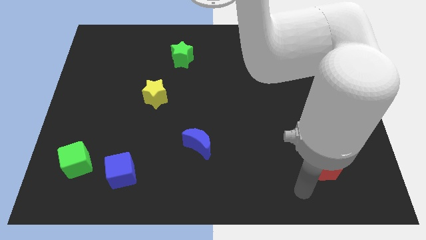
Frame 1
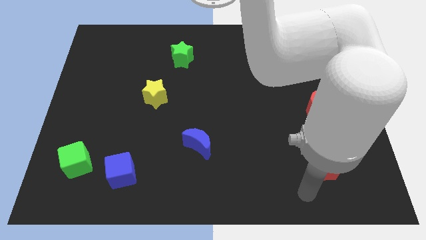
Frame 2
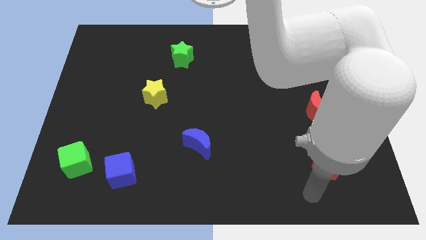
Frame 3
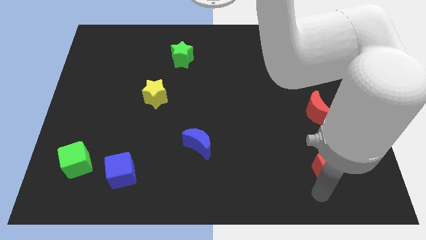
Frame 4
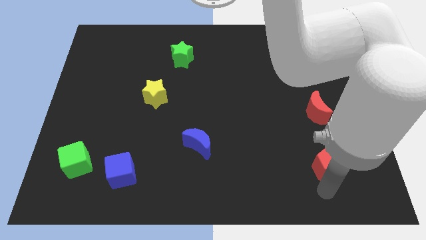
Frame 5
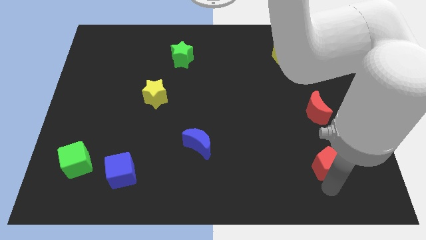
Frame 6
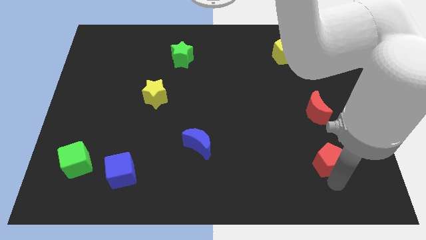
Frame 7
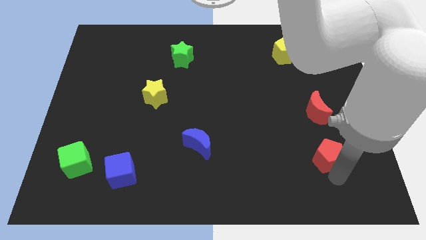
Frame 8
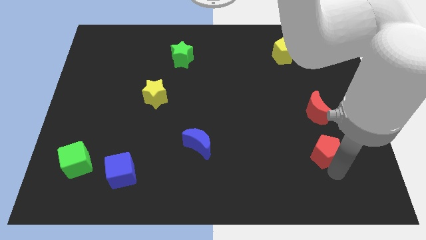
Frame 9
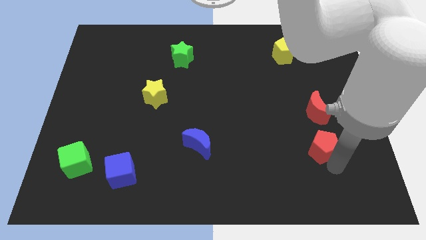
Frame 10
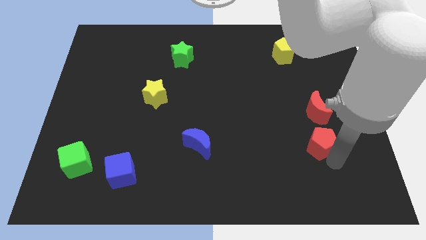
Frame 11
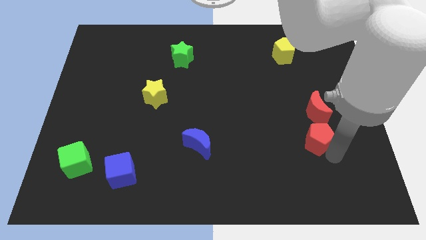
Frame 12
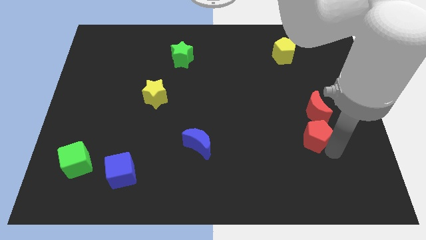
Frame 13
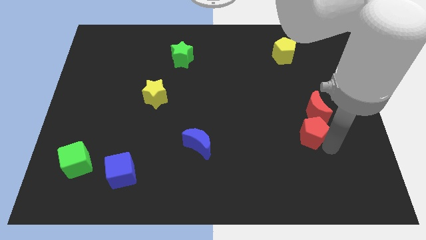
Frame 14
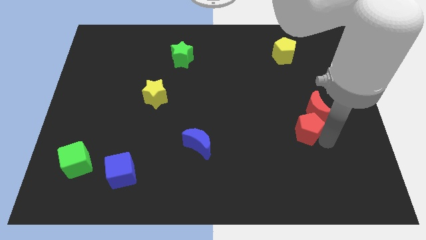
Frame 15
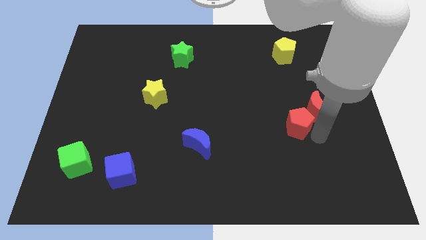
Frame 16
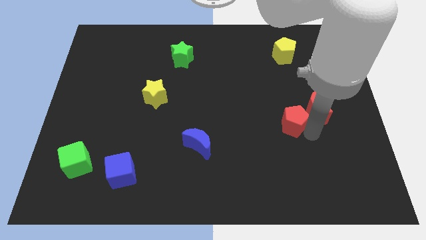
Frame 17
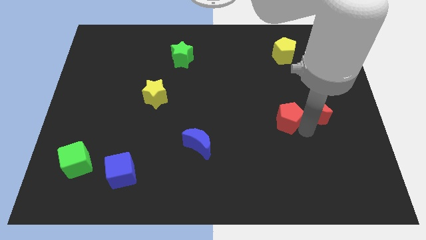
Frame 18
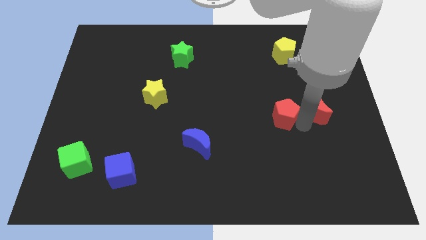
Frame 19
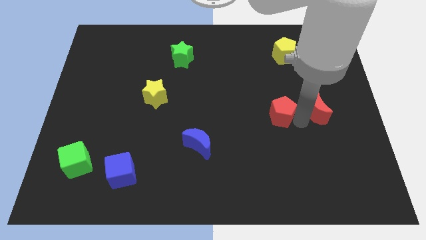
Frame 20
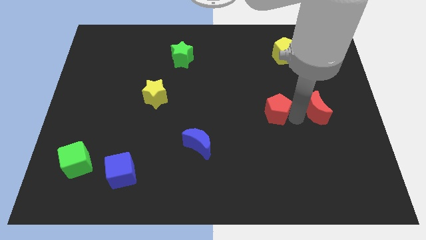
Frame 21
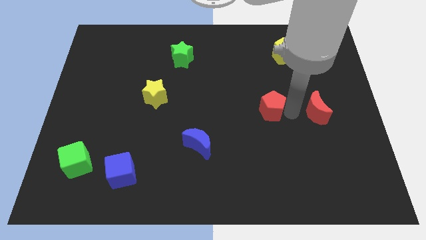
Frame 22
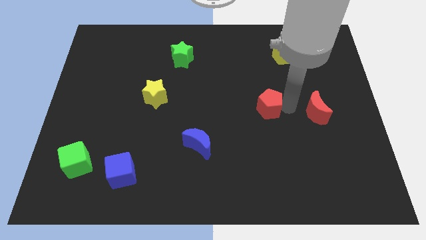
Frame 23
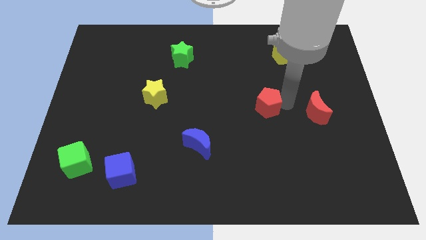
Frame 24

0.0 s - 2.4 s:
push the red pentagon parallel to the red crescent

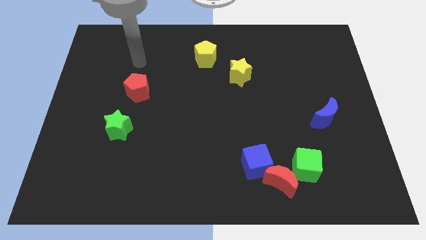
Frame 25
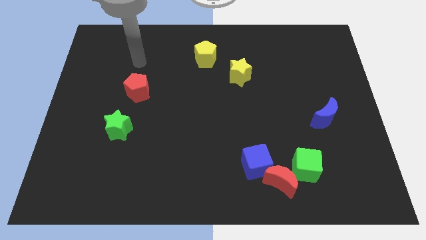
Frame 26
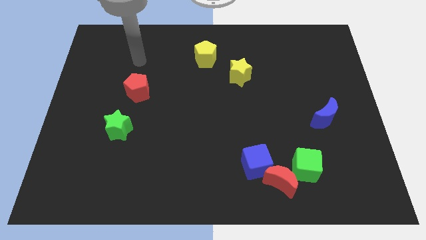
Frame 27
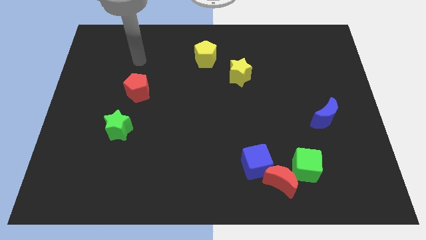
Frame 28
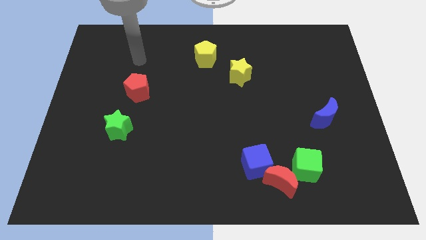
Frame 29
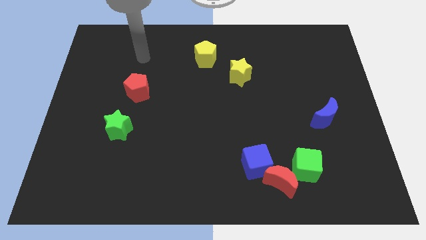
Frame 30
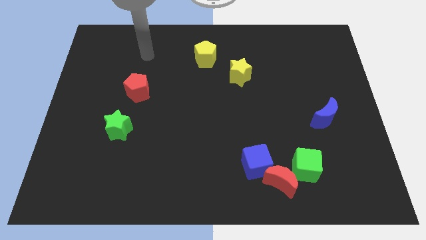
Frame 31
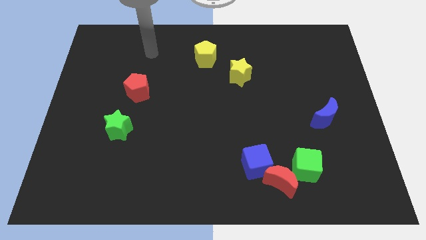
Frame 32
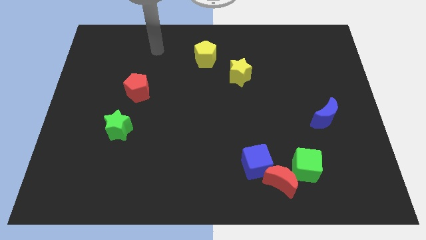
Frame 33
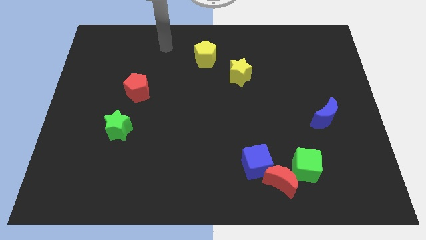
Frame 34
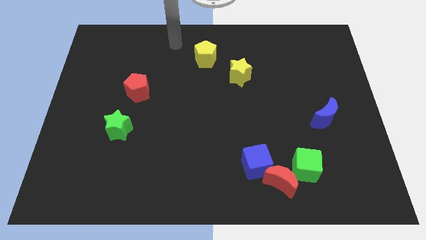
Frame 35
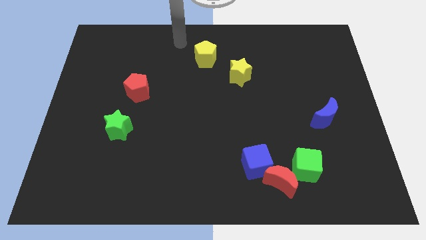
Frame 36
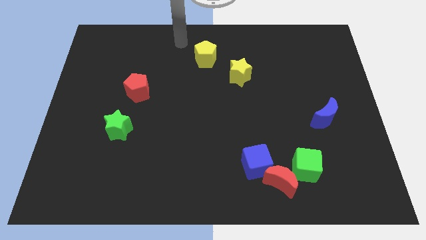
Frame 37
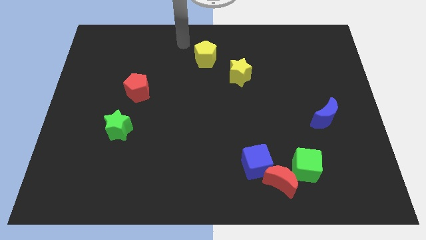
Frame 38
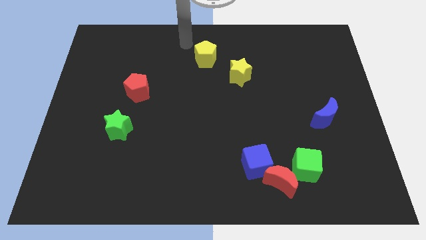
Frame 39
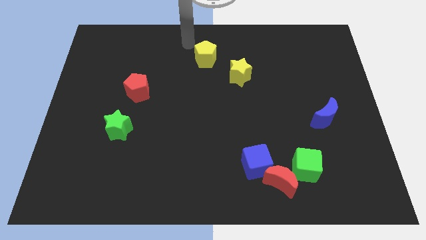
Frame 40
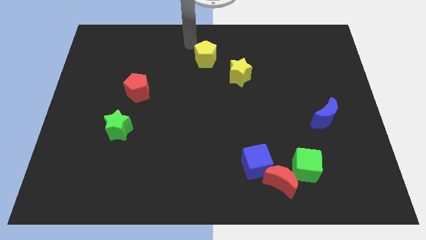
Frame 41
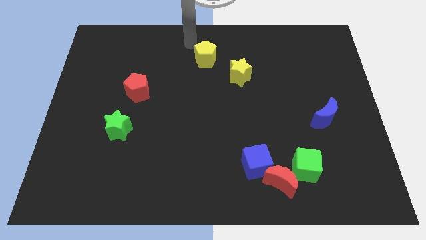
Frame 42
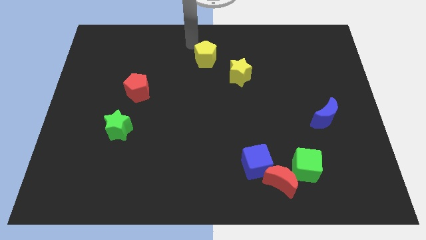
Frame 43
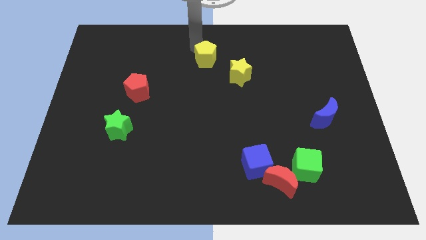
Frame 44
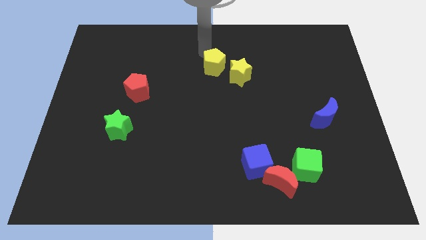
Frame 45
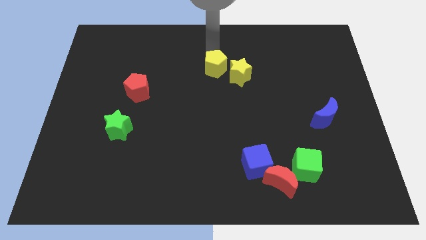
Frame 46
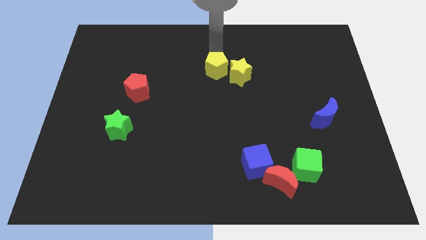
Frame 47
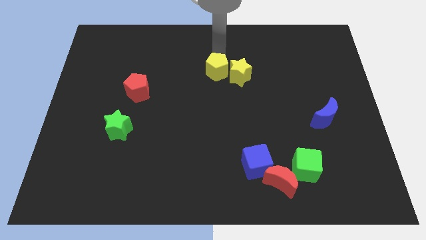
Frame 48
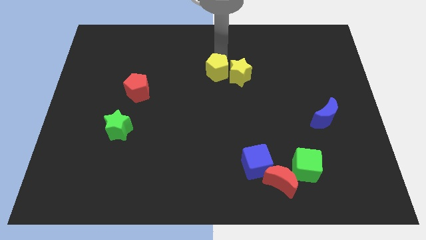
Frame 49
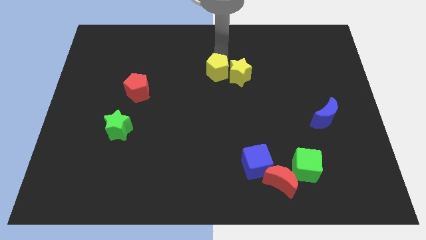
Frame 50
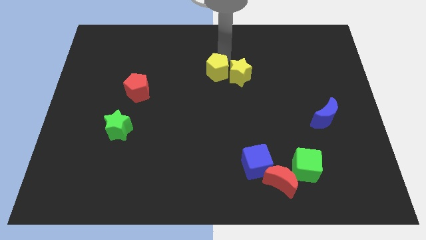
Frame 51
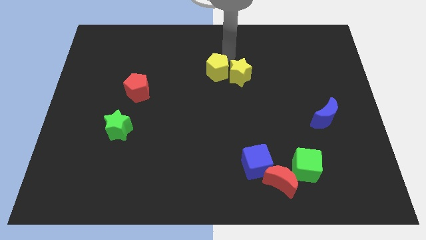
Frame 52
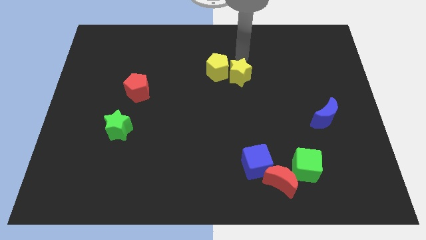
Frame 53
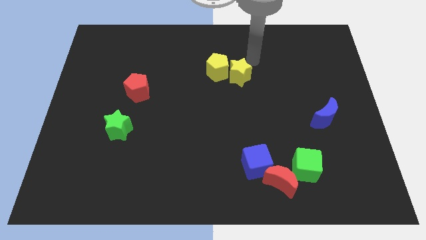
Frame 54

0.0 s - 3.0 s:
slightly move the yellow pentagon to the left side of the yellow star

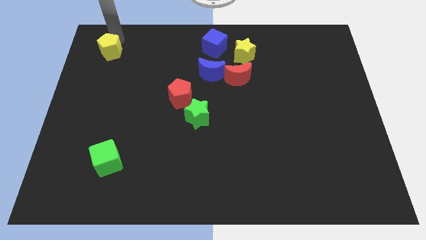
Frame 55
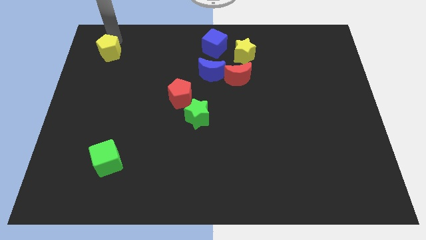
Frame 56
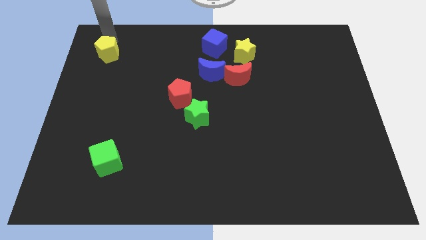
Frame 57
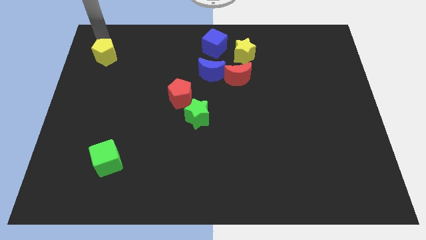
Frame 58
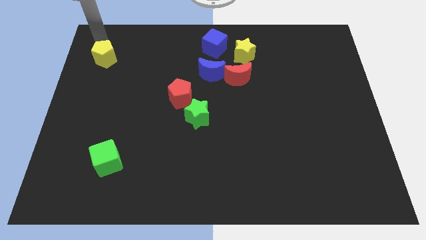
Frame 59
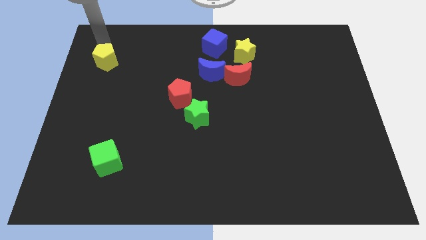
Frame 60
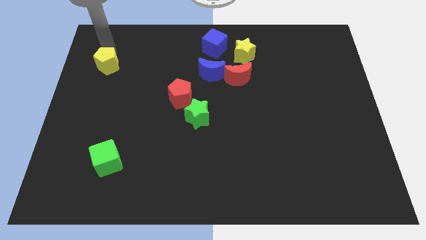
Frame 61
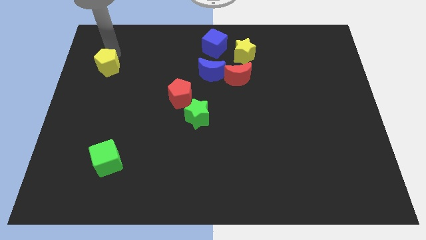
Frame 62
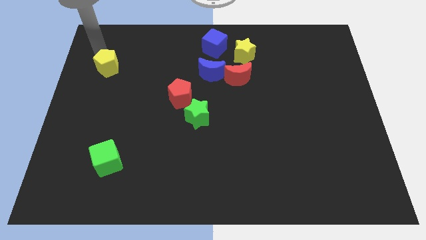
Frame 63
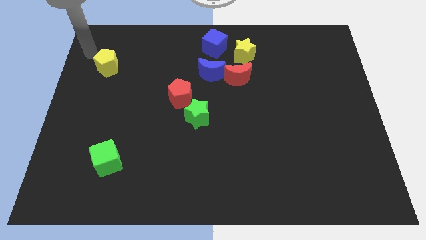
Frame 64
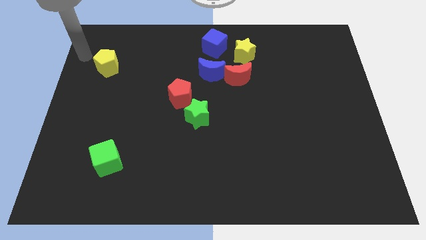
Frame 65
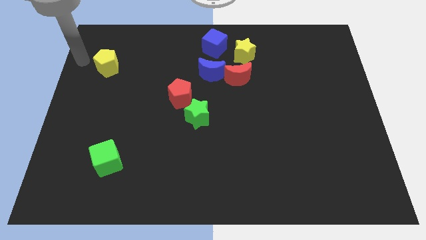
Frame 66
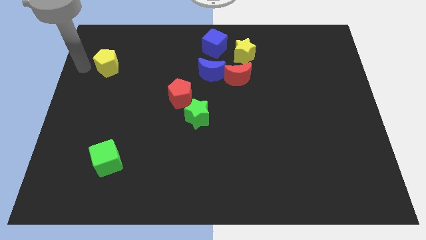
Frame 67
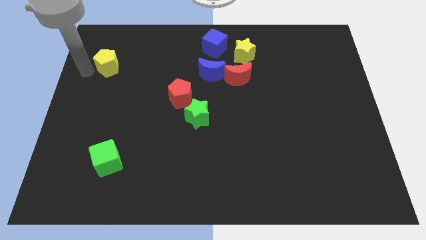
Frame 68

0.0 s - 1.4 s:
push the yellow pentagon slightly downwards

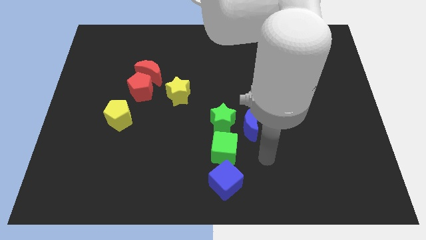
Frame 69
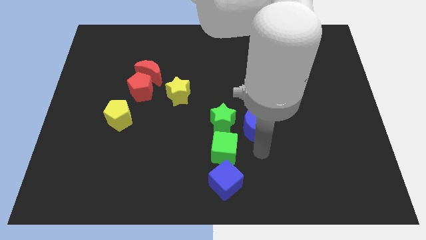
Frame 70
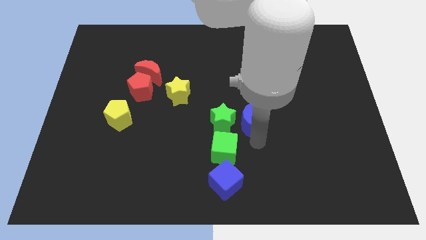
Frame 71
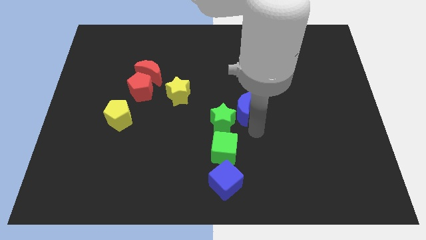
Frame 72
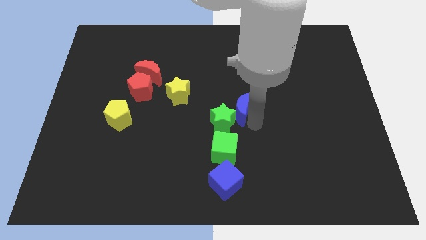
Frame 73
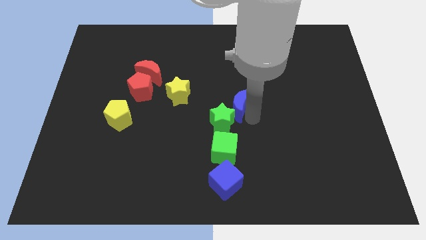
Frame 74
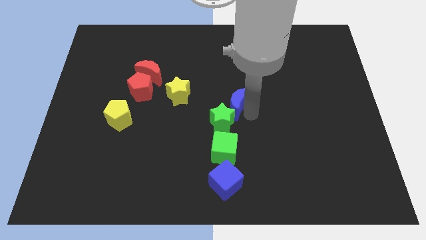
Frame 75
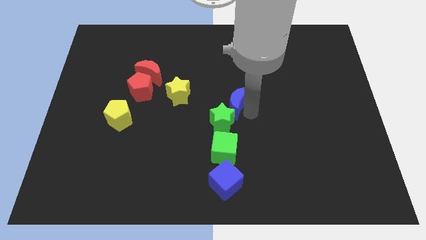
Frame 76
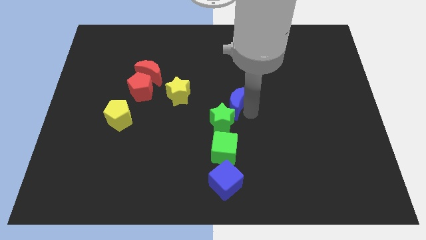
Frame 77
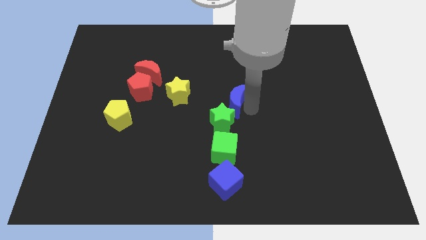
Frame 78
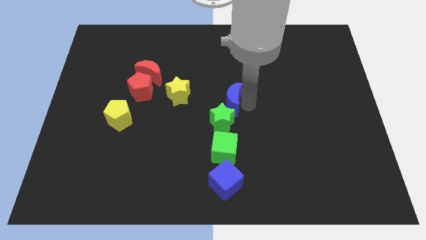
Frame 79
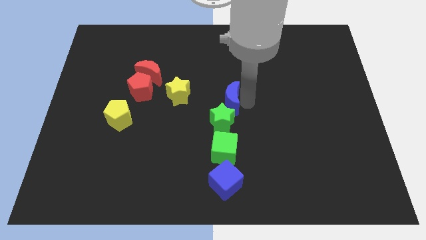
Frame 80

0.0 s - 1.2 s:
move the blue crescent to the top of the green star

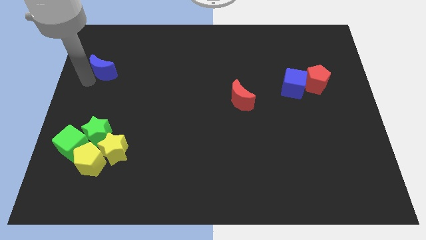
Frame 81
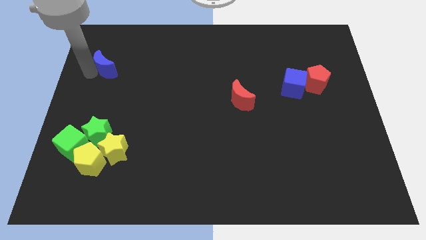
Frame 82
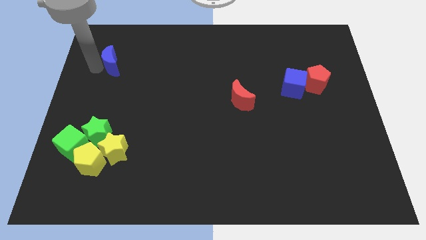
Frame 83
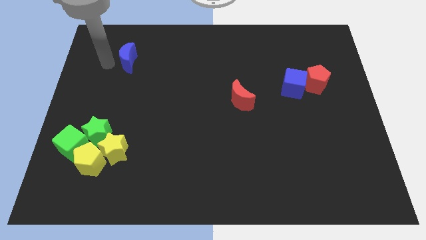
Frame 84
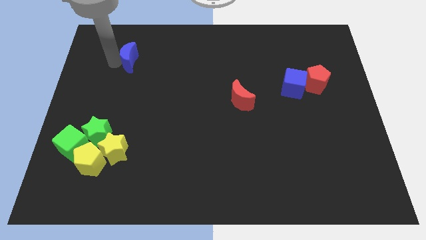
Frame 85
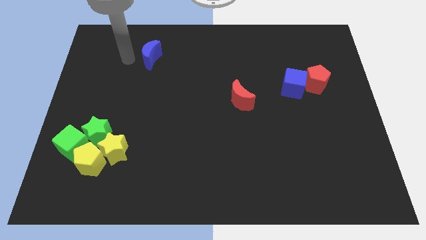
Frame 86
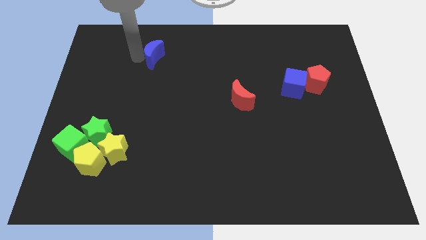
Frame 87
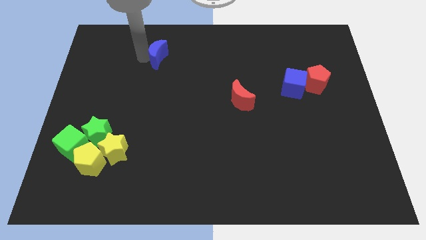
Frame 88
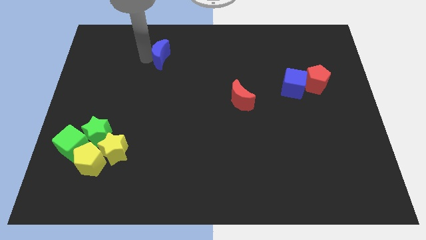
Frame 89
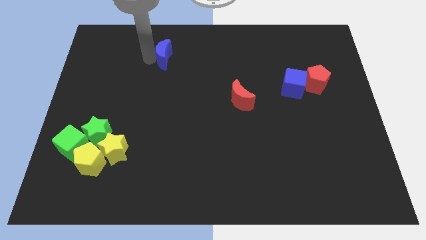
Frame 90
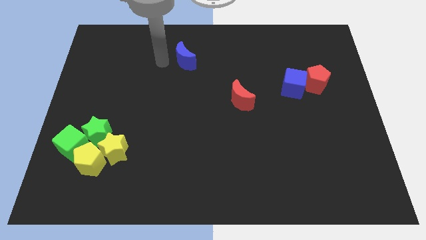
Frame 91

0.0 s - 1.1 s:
move the blue crescent slightly to the right
